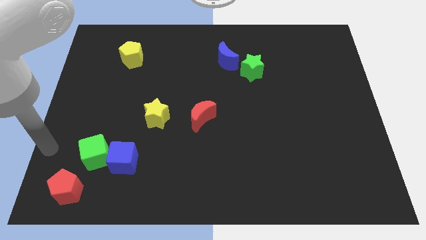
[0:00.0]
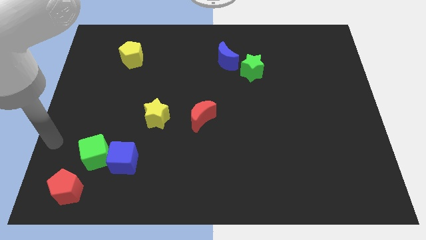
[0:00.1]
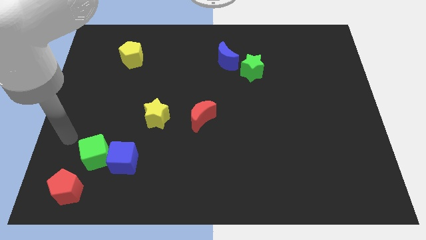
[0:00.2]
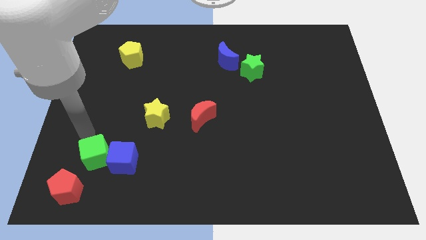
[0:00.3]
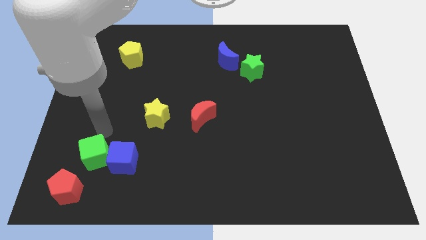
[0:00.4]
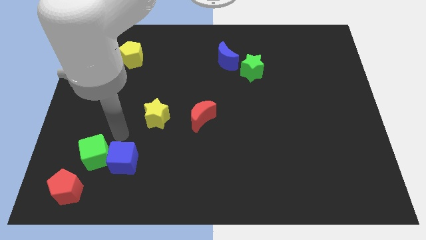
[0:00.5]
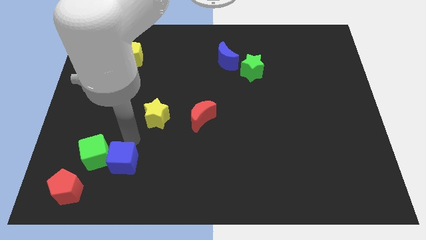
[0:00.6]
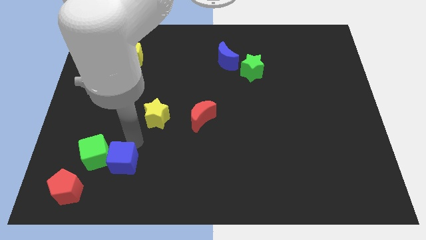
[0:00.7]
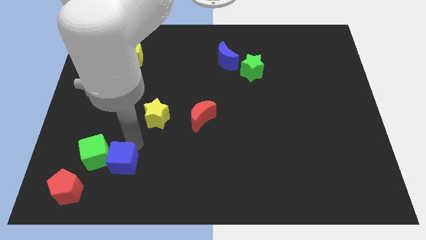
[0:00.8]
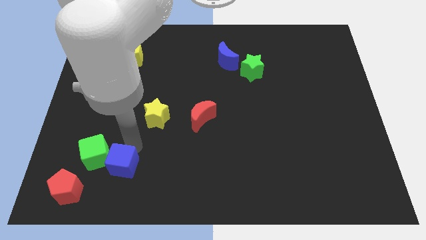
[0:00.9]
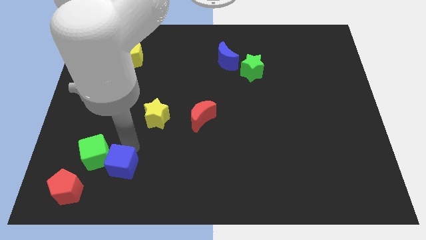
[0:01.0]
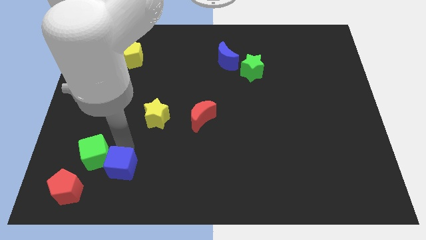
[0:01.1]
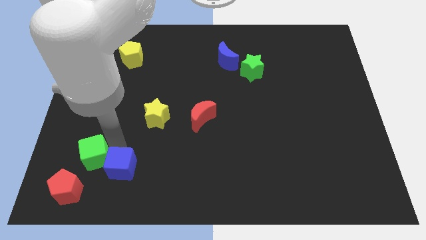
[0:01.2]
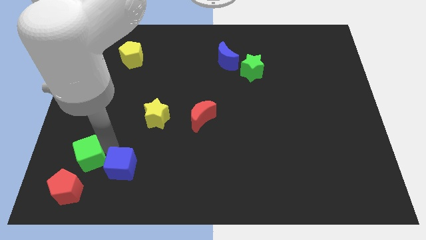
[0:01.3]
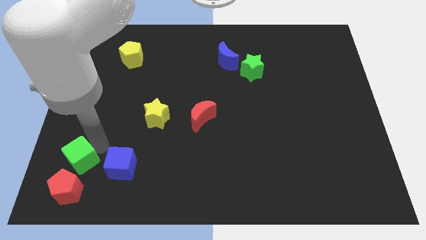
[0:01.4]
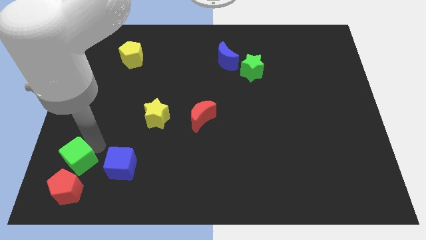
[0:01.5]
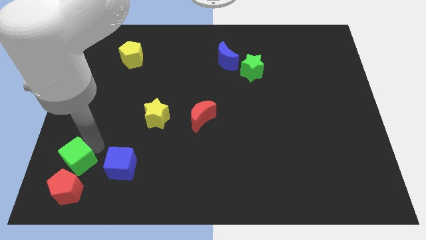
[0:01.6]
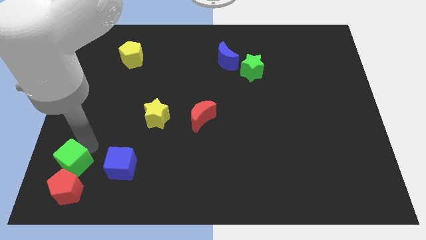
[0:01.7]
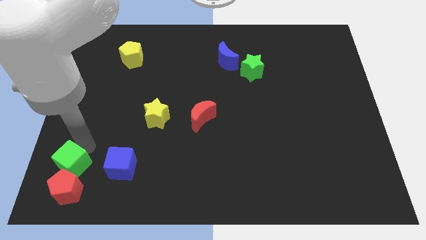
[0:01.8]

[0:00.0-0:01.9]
separate green cube and blue cube

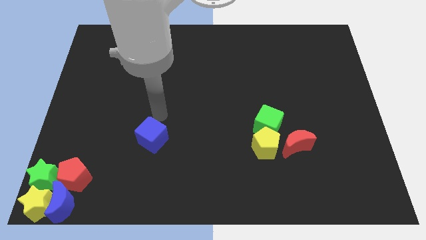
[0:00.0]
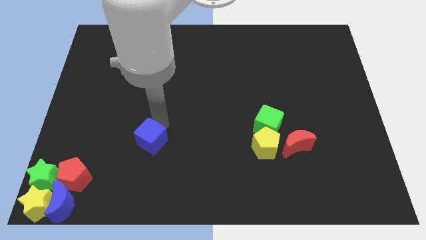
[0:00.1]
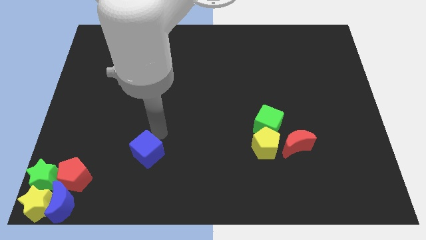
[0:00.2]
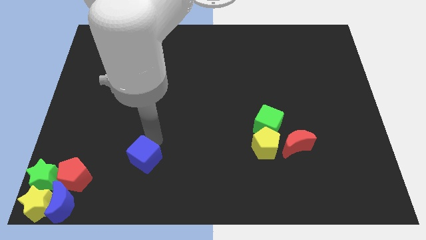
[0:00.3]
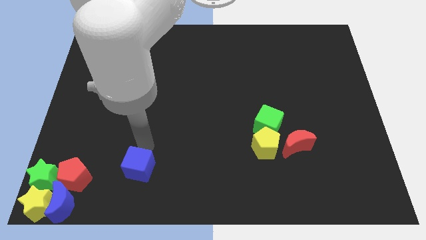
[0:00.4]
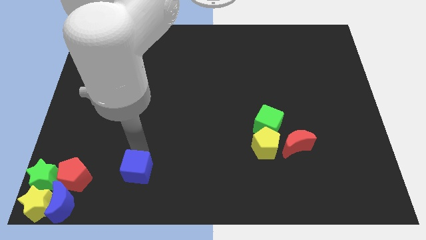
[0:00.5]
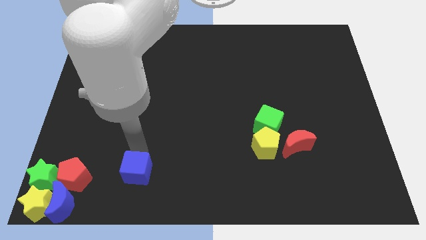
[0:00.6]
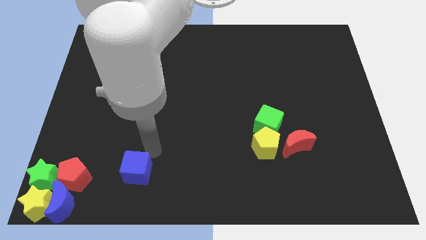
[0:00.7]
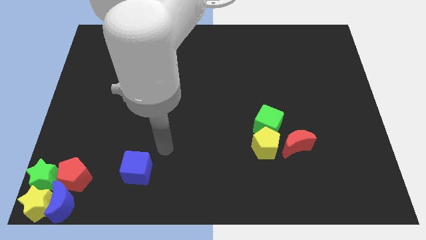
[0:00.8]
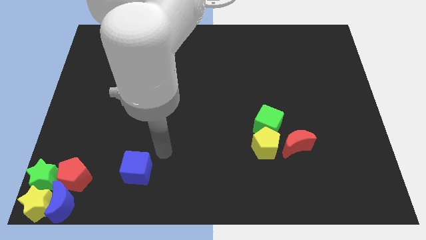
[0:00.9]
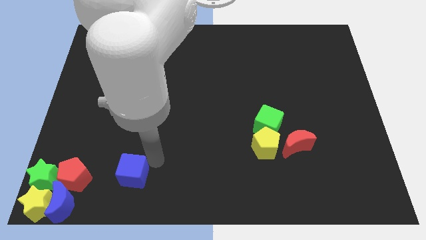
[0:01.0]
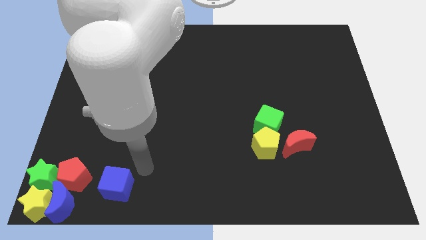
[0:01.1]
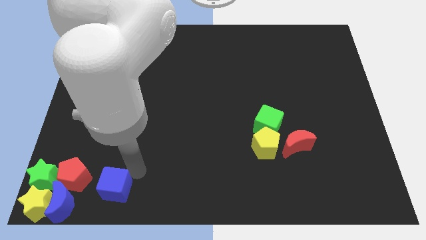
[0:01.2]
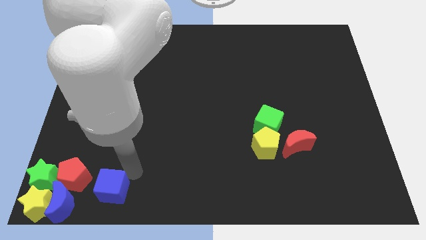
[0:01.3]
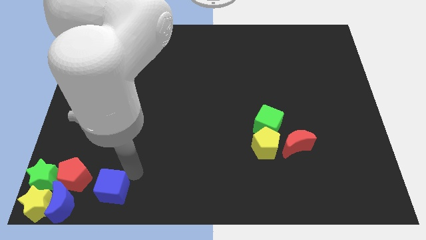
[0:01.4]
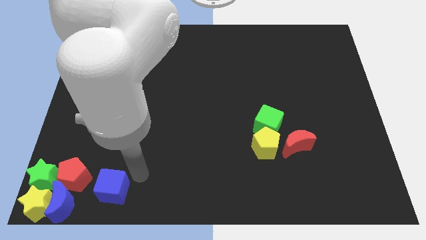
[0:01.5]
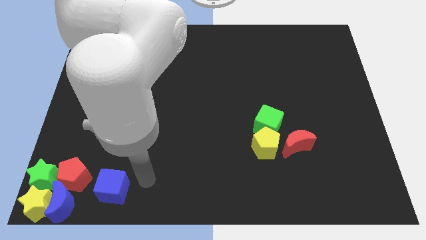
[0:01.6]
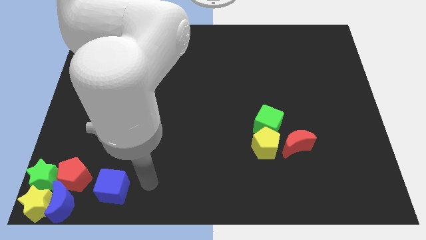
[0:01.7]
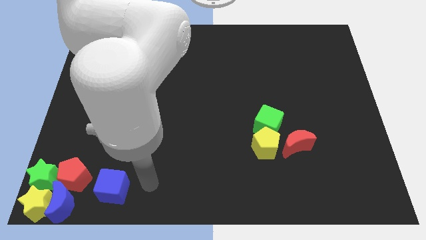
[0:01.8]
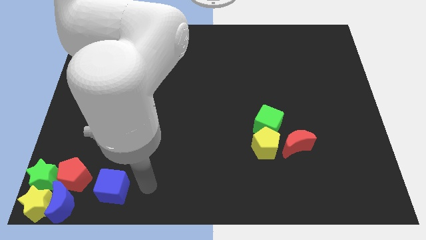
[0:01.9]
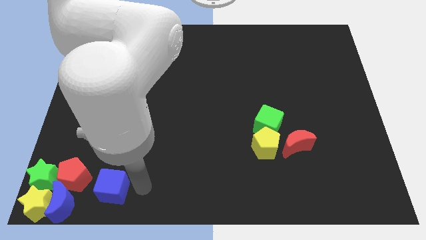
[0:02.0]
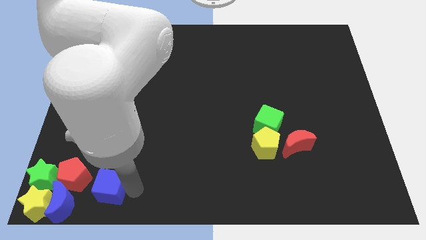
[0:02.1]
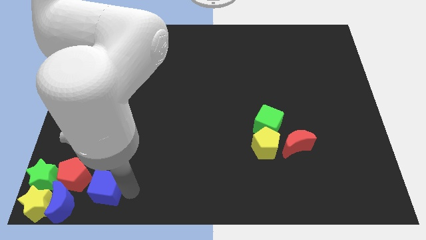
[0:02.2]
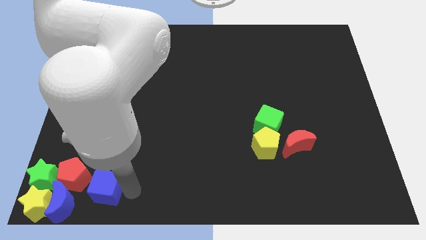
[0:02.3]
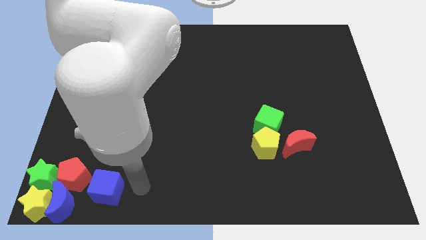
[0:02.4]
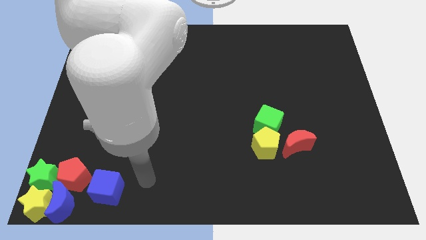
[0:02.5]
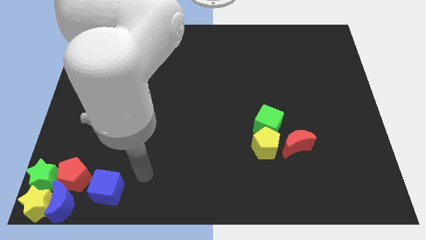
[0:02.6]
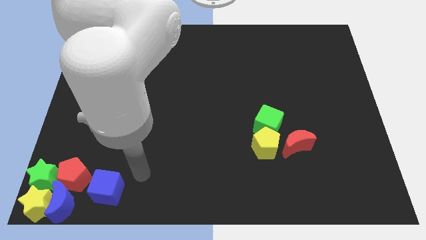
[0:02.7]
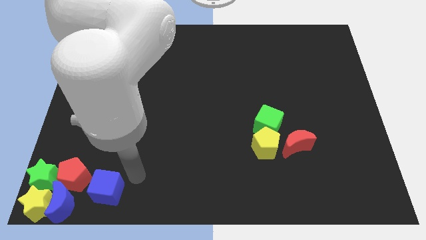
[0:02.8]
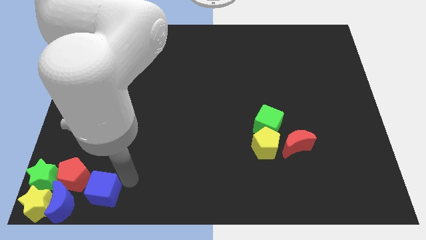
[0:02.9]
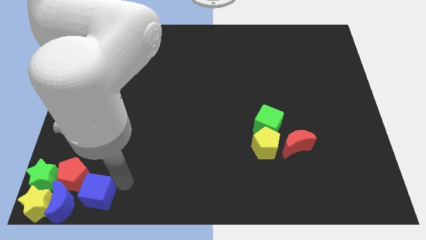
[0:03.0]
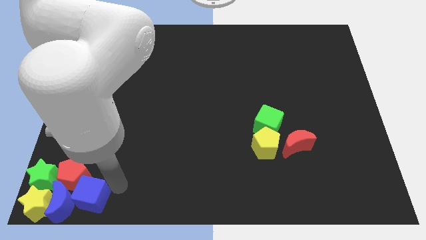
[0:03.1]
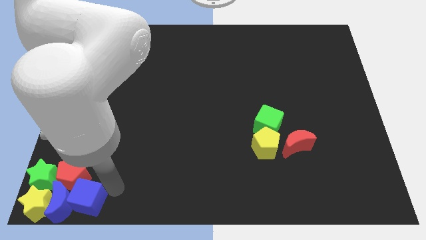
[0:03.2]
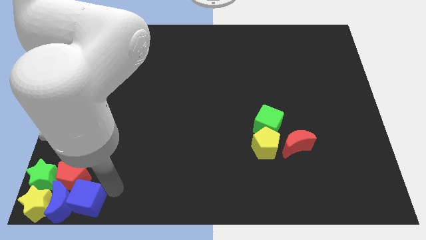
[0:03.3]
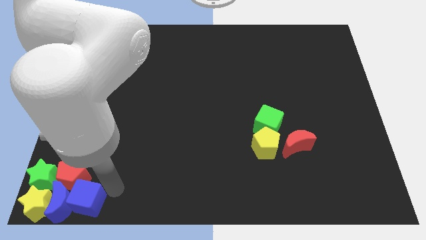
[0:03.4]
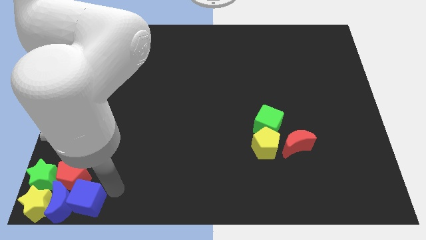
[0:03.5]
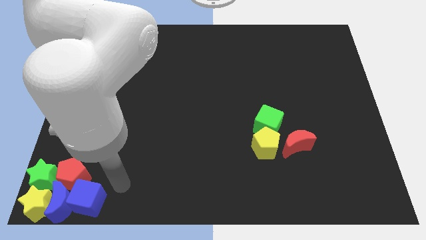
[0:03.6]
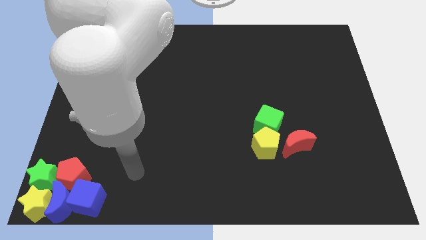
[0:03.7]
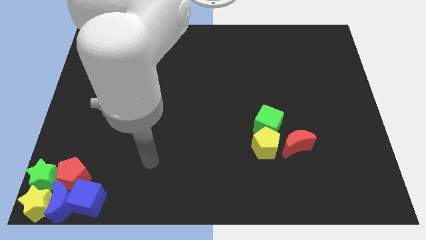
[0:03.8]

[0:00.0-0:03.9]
add the blue cube to the group of blocks at the bottom left corner of the board

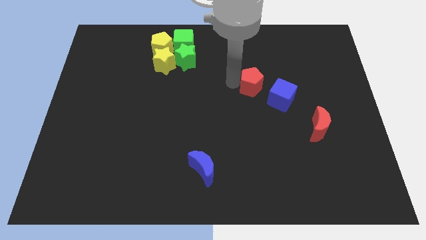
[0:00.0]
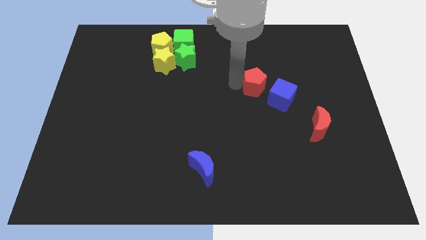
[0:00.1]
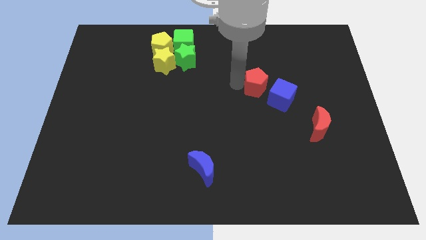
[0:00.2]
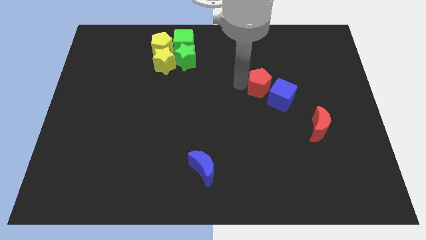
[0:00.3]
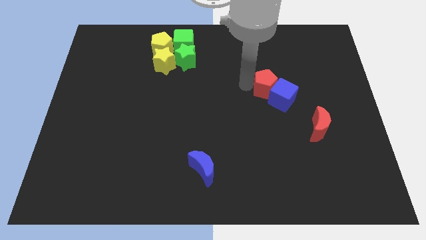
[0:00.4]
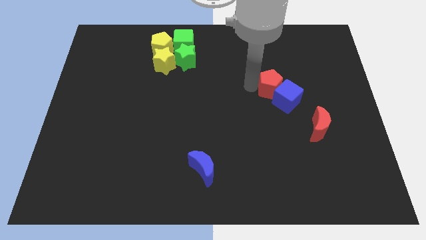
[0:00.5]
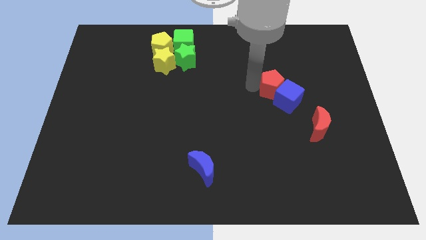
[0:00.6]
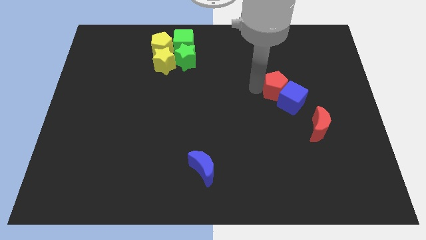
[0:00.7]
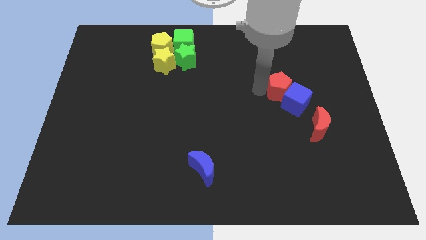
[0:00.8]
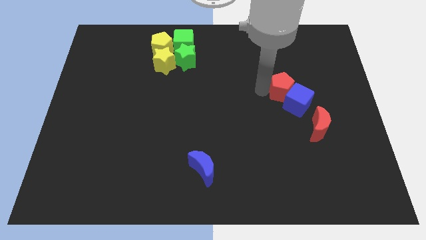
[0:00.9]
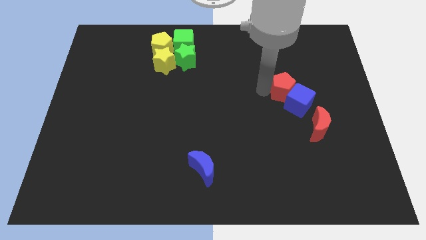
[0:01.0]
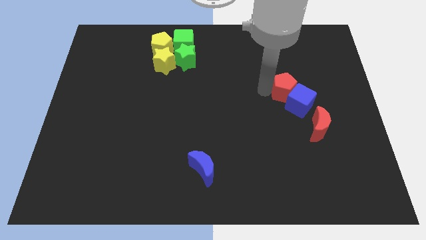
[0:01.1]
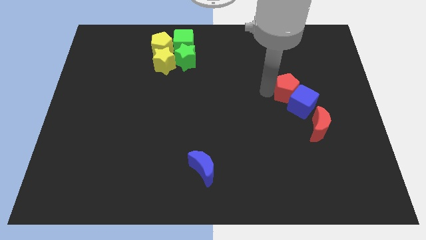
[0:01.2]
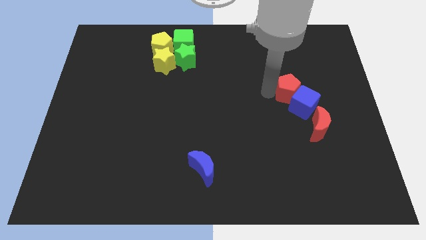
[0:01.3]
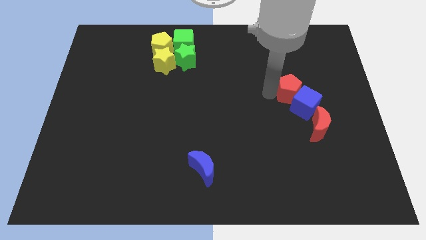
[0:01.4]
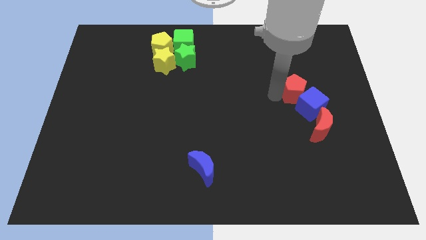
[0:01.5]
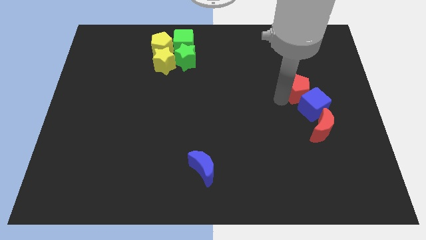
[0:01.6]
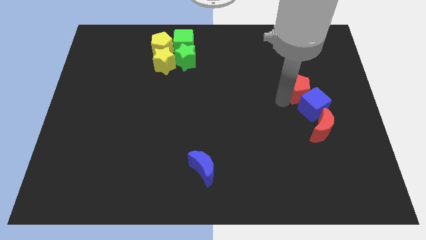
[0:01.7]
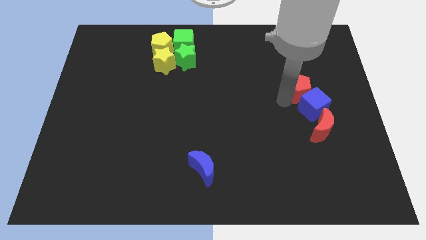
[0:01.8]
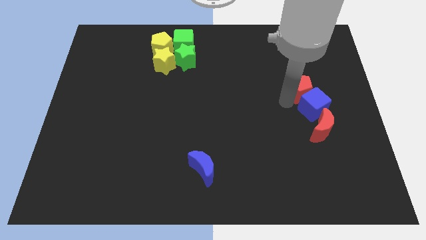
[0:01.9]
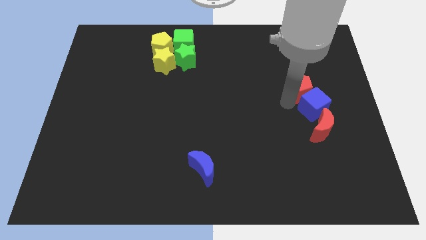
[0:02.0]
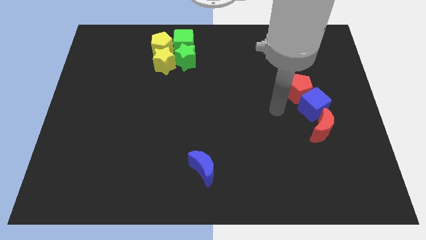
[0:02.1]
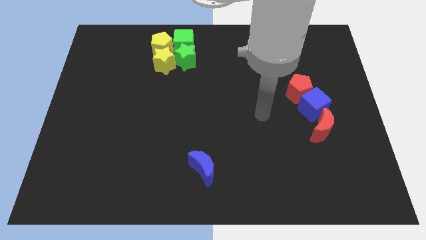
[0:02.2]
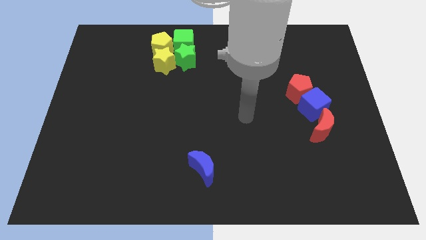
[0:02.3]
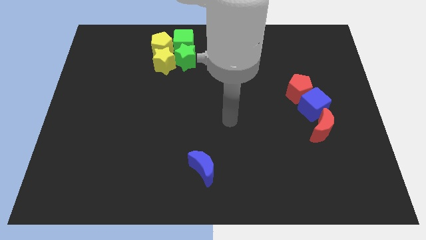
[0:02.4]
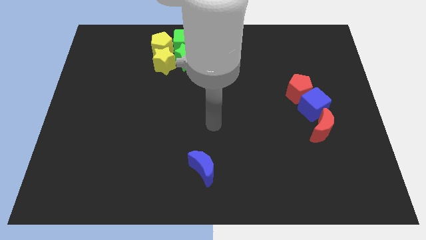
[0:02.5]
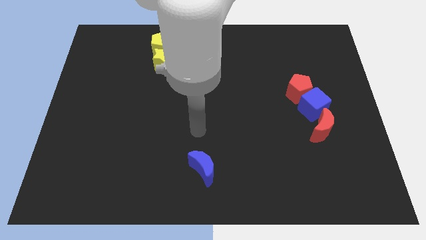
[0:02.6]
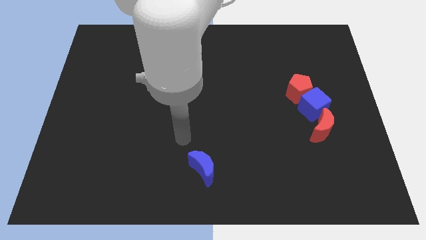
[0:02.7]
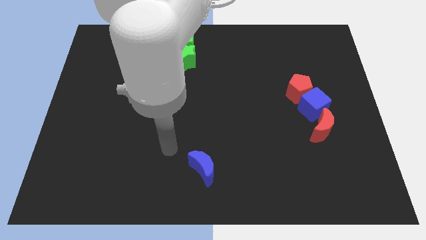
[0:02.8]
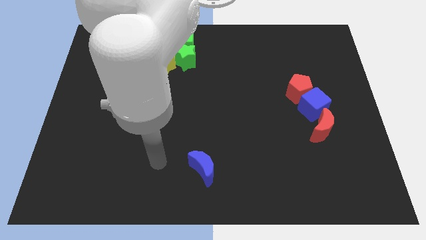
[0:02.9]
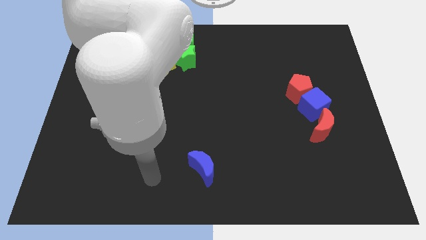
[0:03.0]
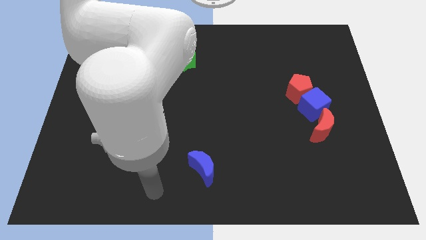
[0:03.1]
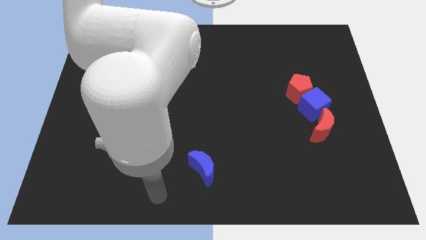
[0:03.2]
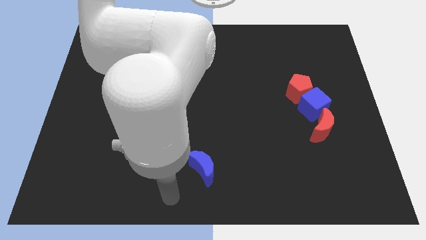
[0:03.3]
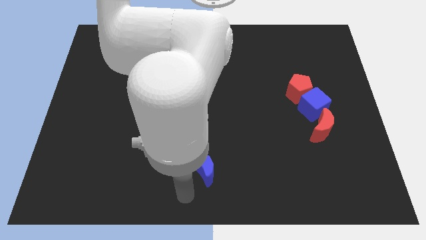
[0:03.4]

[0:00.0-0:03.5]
place red pentagon close to blue cube
